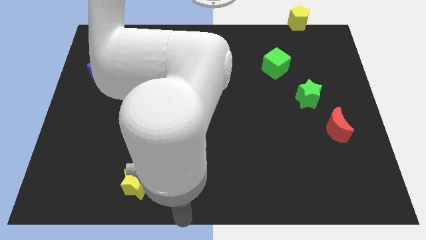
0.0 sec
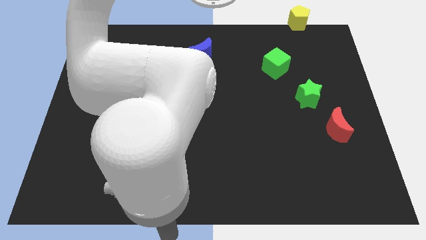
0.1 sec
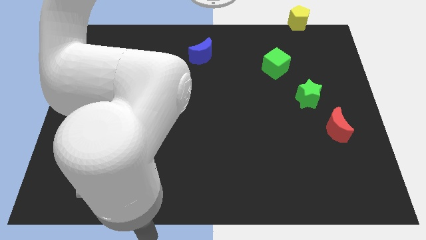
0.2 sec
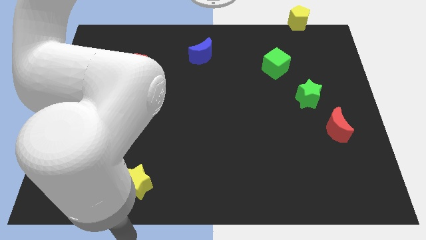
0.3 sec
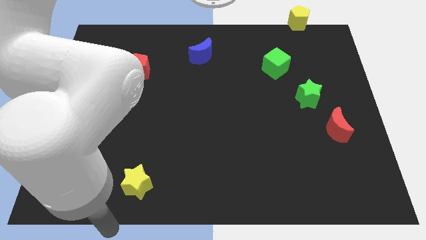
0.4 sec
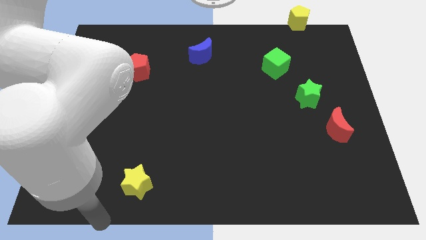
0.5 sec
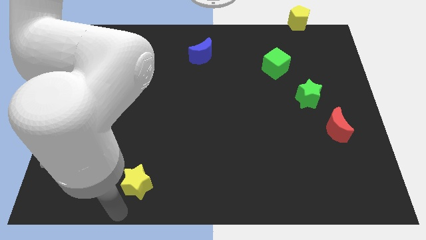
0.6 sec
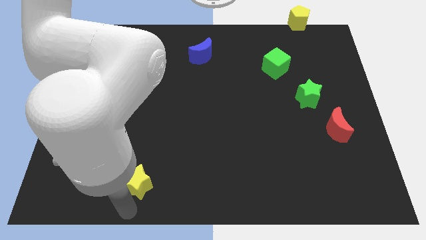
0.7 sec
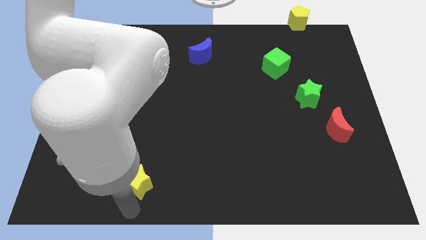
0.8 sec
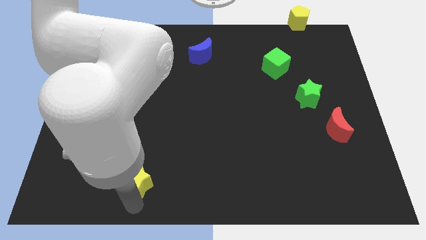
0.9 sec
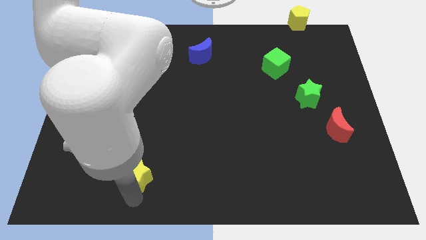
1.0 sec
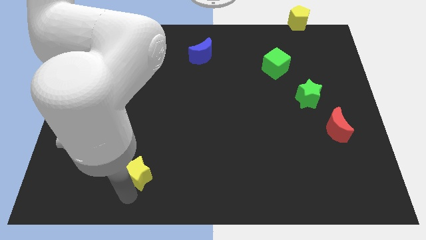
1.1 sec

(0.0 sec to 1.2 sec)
move your arm towards the yellow star

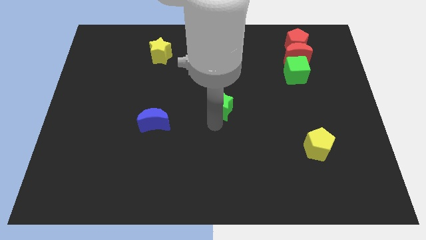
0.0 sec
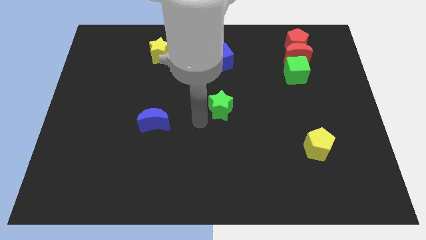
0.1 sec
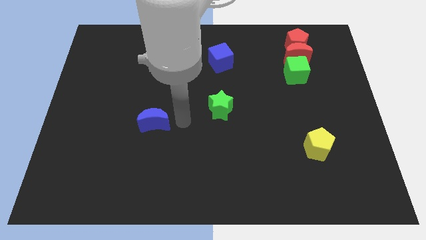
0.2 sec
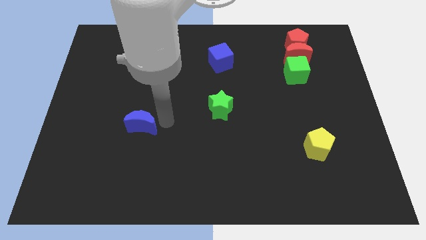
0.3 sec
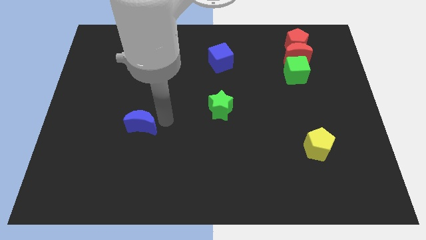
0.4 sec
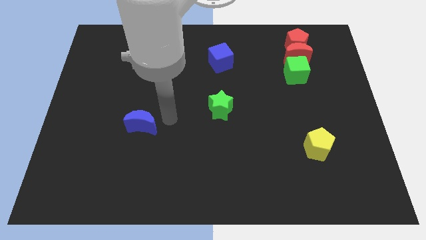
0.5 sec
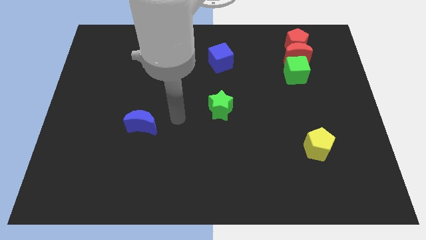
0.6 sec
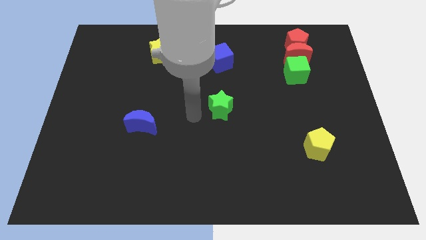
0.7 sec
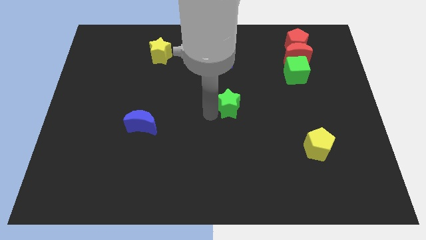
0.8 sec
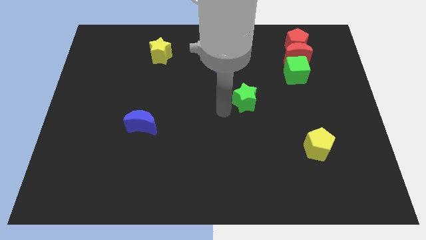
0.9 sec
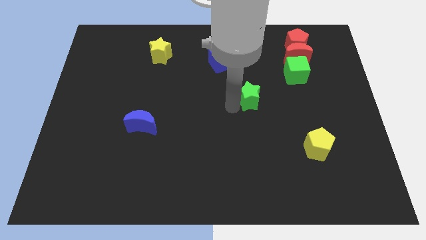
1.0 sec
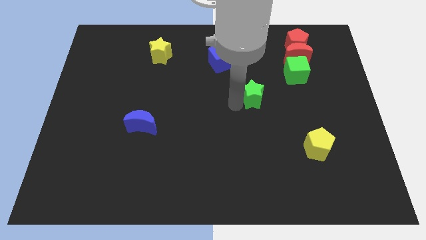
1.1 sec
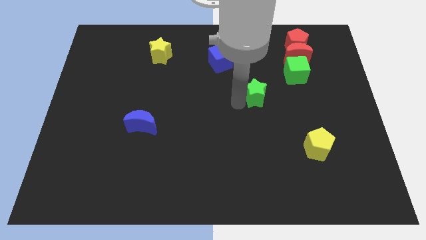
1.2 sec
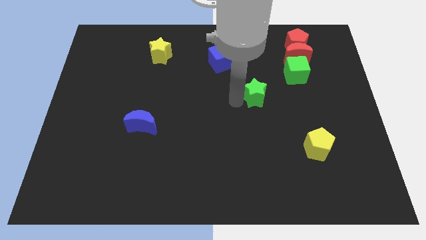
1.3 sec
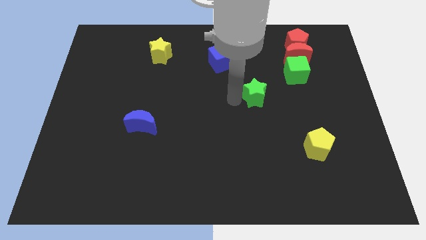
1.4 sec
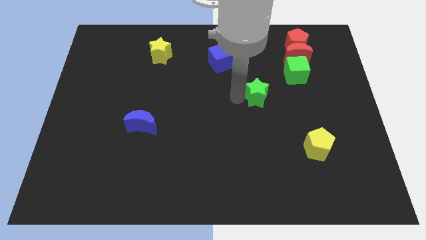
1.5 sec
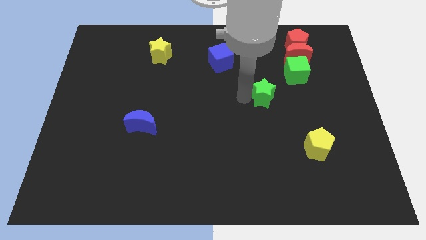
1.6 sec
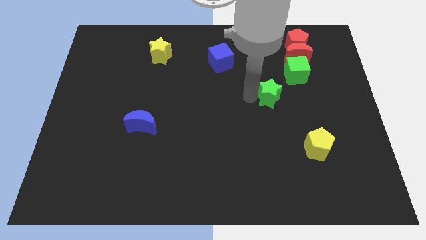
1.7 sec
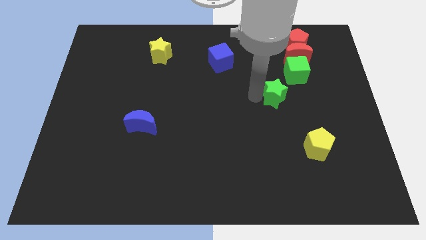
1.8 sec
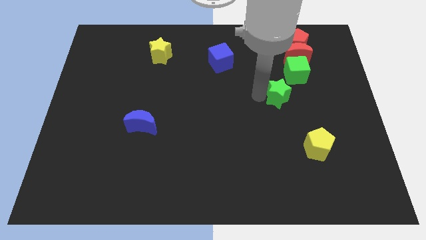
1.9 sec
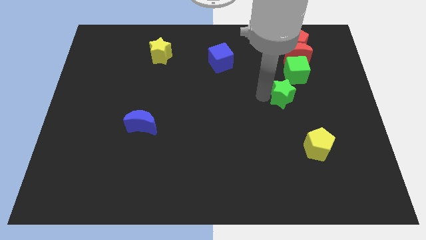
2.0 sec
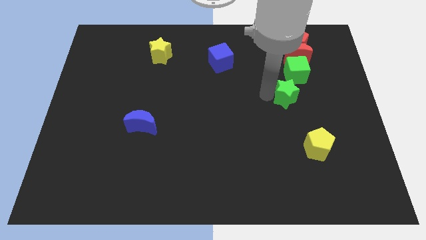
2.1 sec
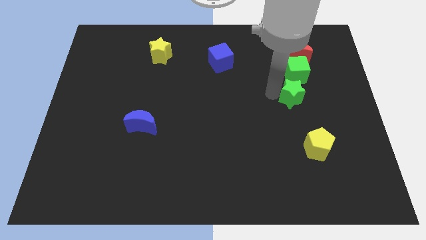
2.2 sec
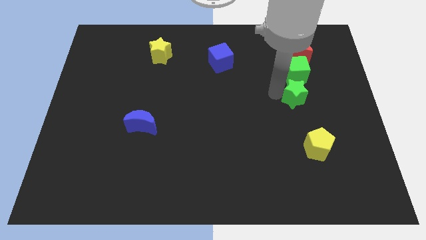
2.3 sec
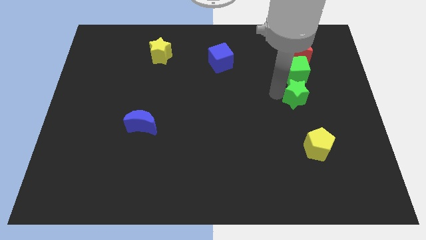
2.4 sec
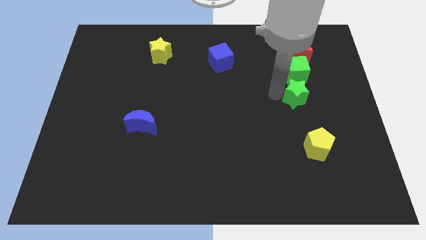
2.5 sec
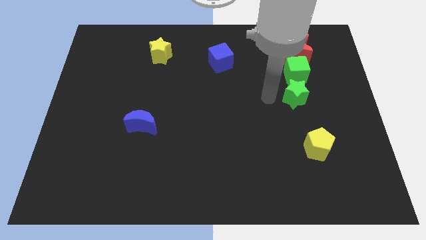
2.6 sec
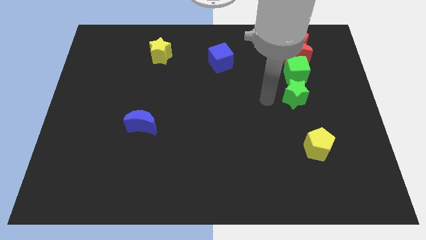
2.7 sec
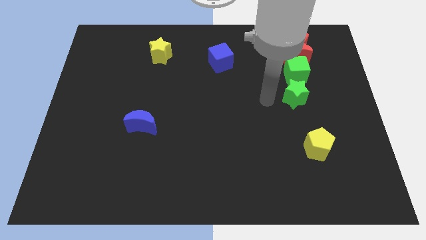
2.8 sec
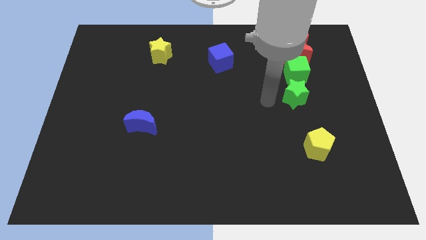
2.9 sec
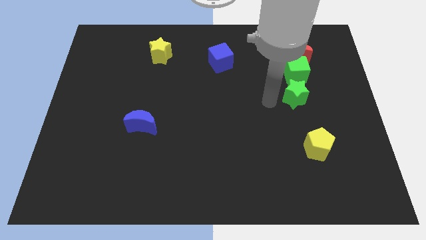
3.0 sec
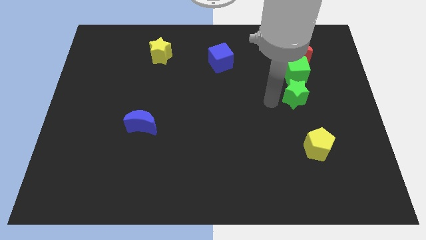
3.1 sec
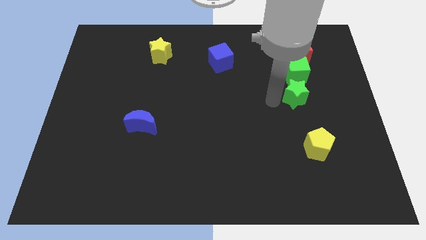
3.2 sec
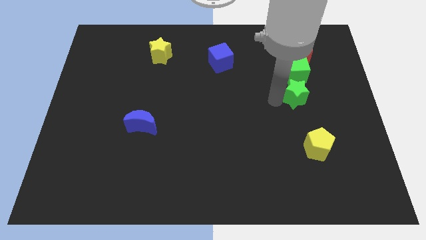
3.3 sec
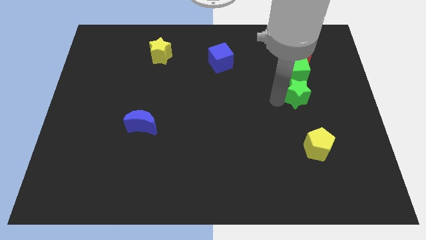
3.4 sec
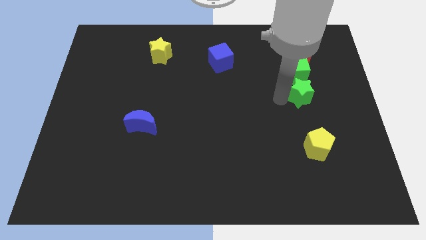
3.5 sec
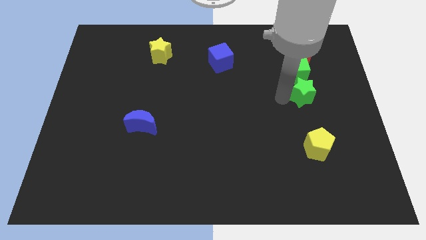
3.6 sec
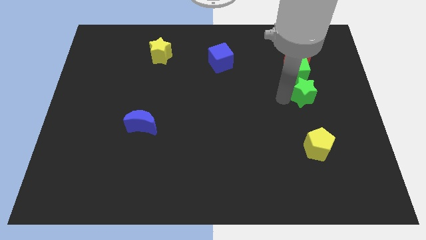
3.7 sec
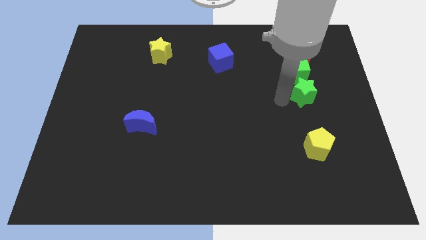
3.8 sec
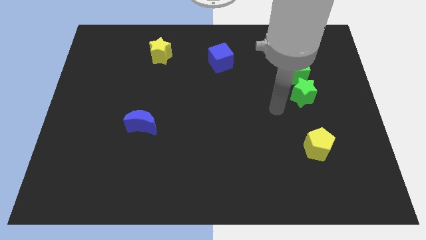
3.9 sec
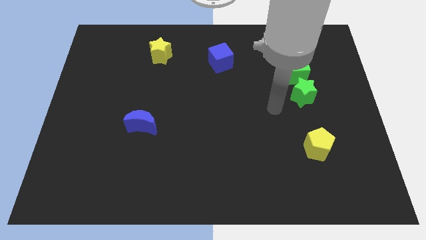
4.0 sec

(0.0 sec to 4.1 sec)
place the green star at the bottom side of the green cube

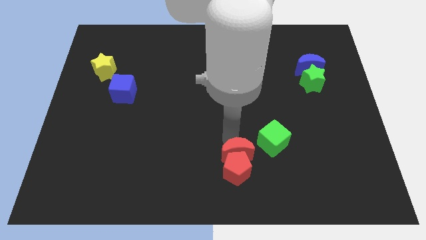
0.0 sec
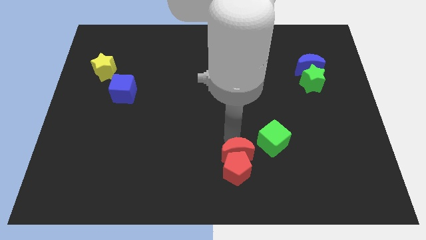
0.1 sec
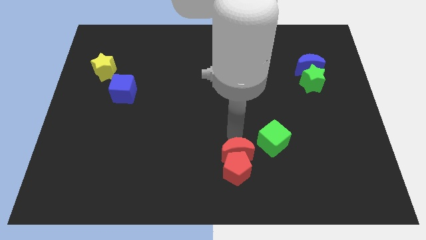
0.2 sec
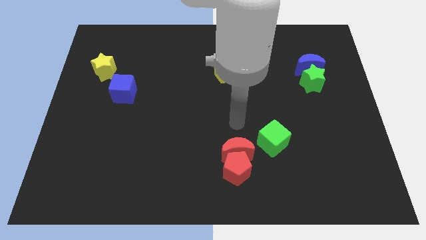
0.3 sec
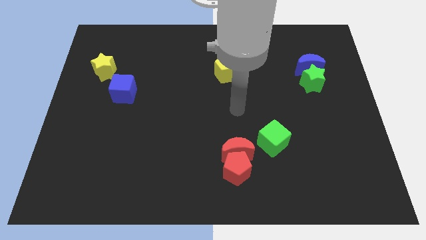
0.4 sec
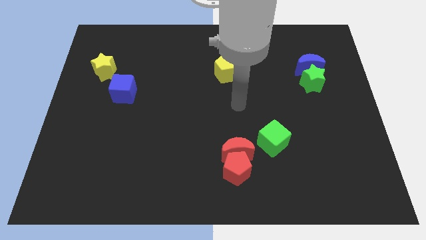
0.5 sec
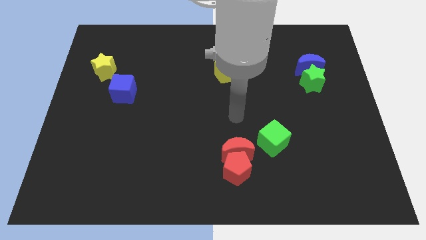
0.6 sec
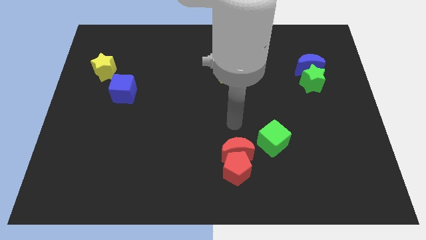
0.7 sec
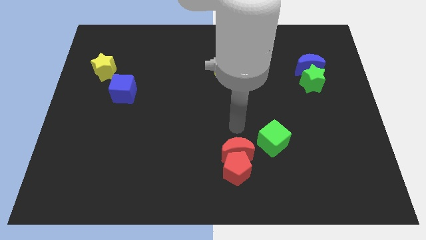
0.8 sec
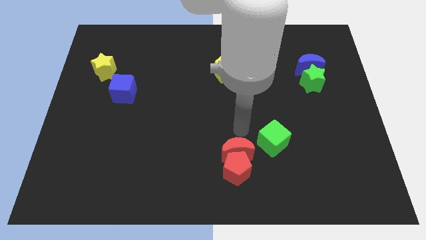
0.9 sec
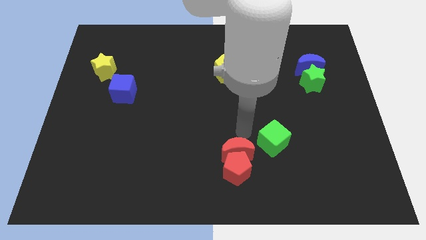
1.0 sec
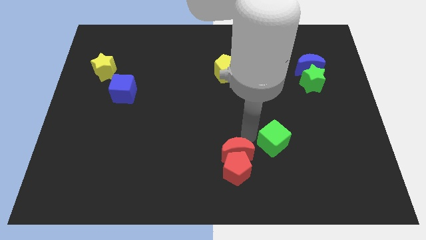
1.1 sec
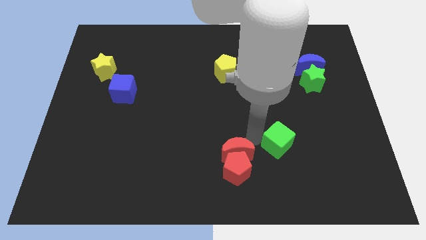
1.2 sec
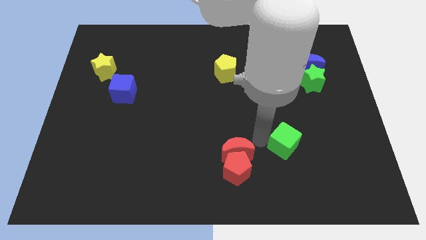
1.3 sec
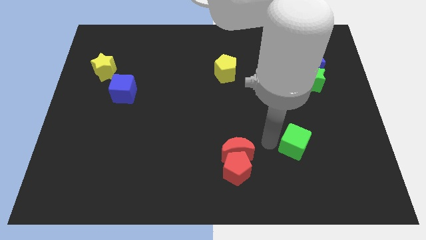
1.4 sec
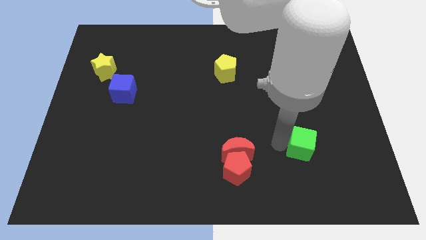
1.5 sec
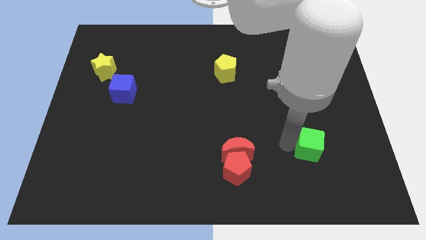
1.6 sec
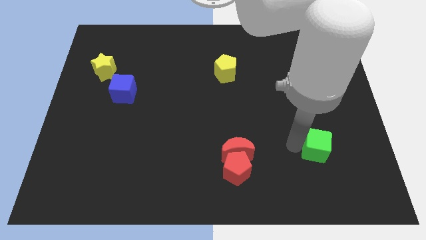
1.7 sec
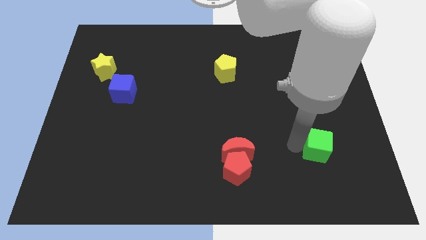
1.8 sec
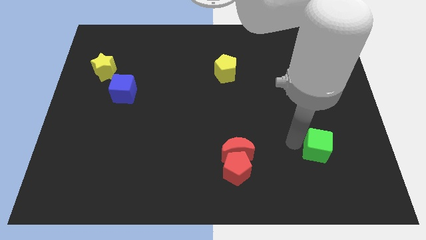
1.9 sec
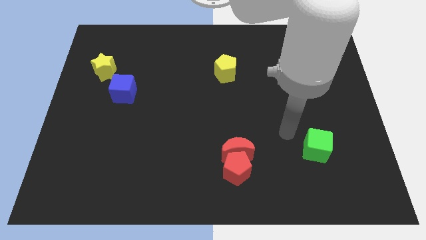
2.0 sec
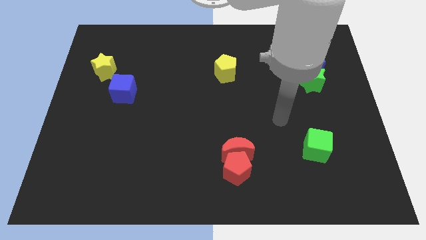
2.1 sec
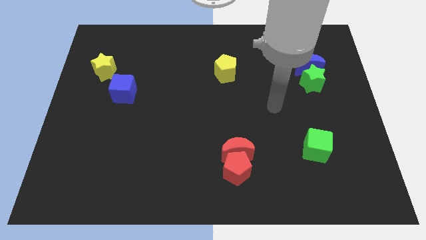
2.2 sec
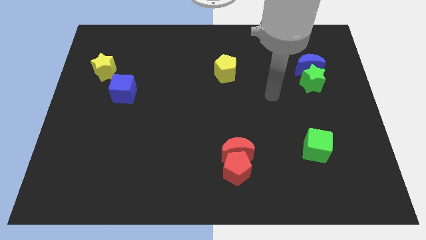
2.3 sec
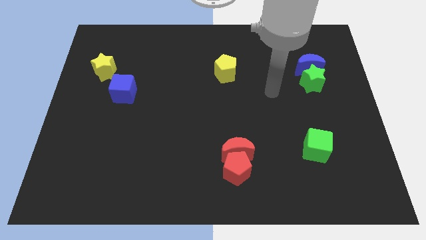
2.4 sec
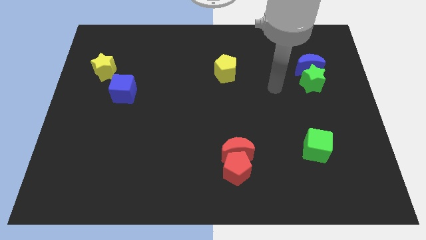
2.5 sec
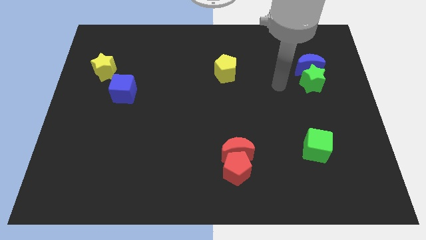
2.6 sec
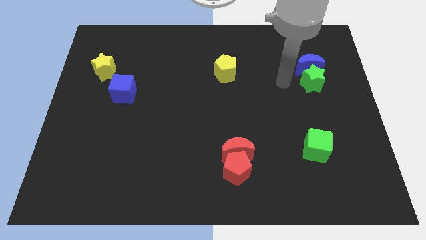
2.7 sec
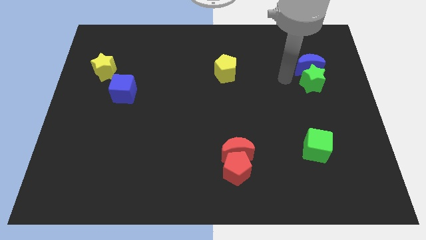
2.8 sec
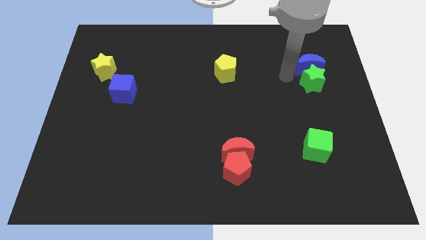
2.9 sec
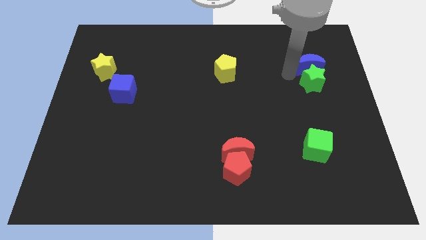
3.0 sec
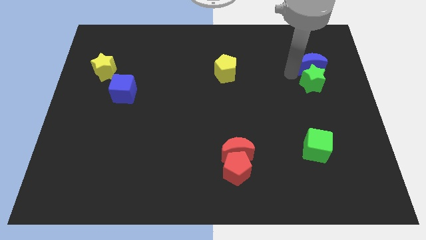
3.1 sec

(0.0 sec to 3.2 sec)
push the green cube to the right side of the board

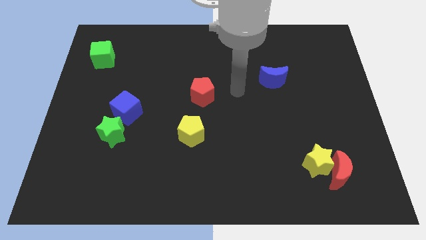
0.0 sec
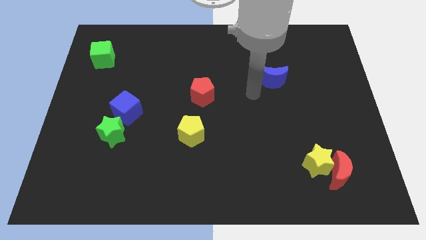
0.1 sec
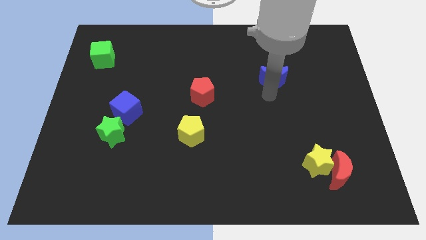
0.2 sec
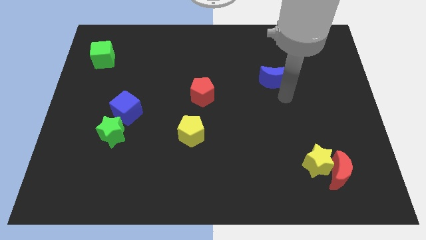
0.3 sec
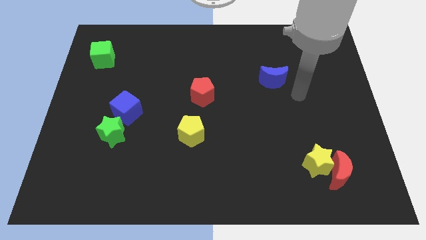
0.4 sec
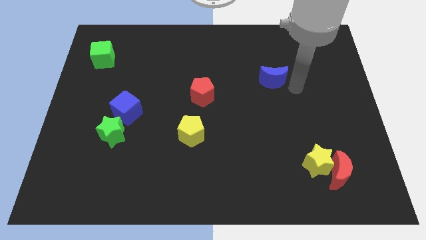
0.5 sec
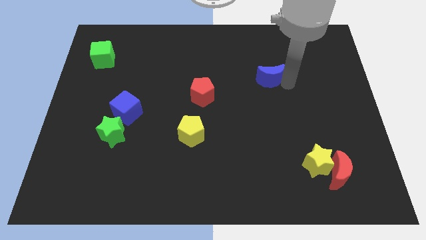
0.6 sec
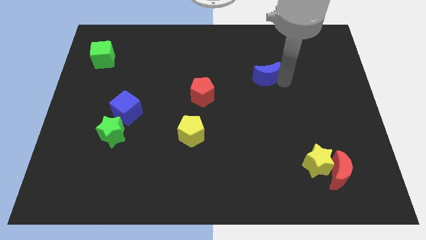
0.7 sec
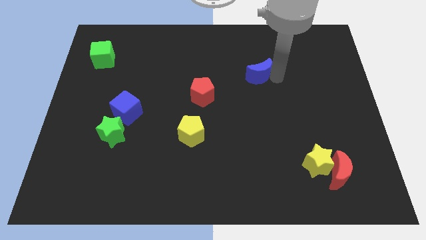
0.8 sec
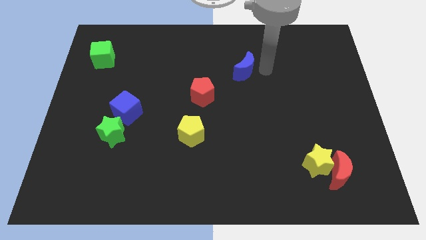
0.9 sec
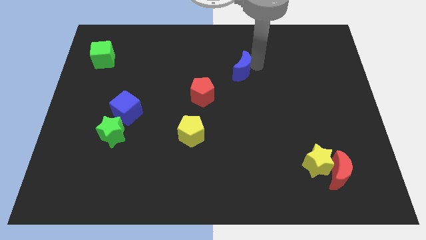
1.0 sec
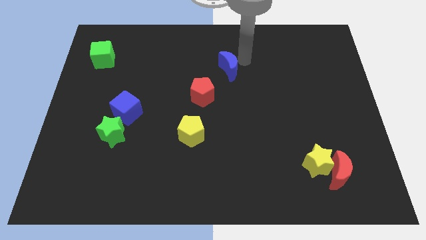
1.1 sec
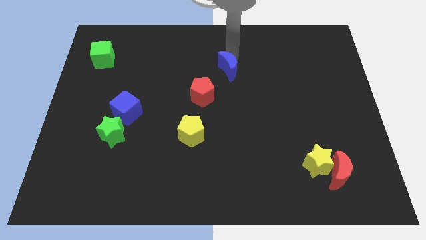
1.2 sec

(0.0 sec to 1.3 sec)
move the blue moon diagonal to the yellow star
